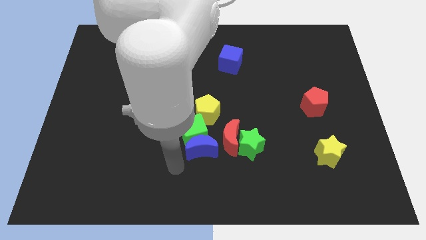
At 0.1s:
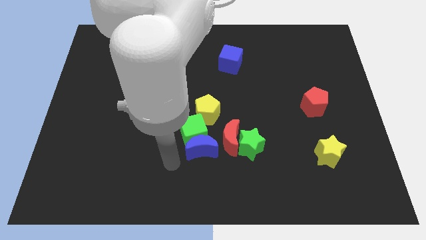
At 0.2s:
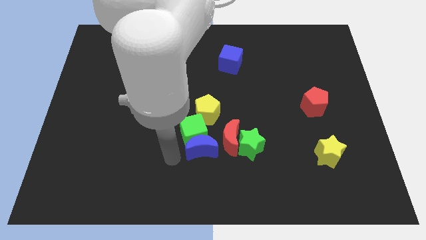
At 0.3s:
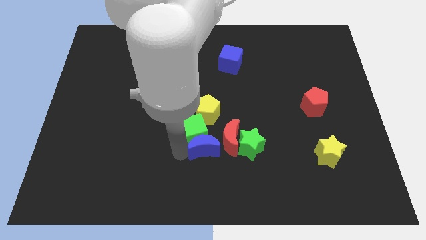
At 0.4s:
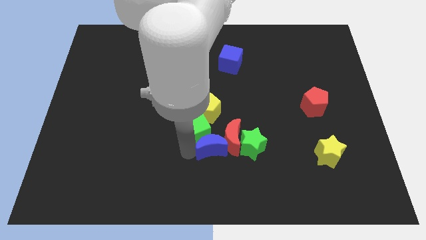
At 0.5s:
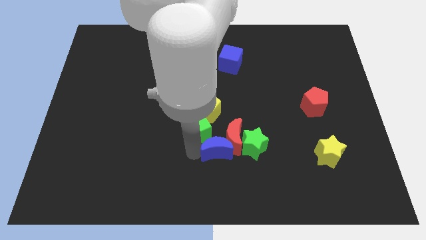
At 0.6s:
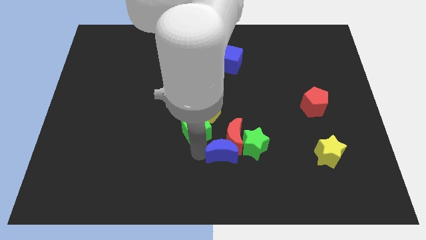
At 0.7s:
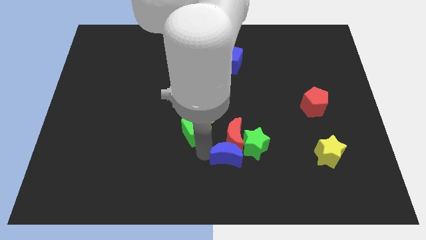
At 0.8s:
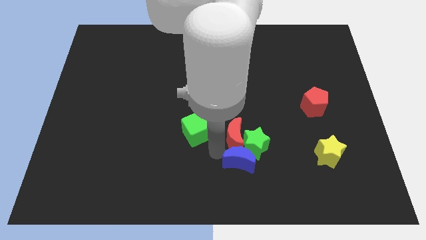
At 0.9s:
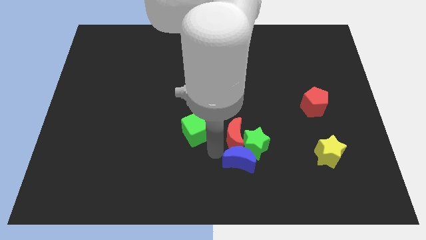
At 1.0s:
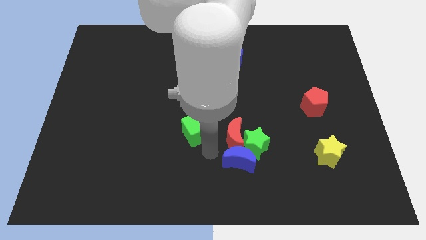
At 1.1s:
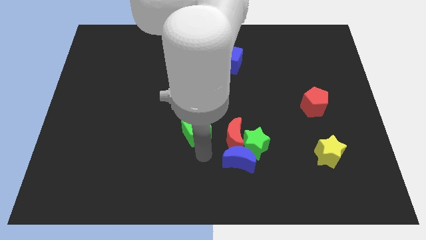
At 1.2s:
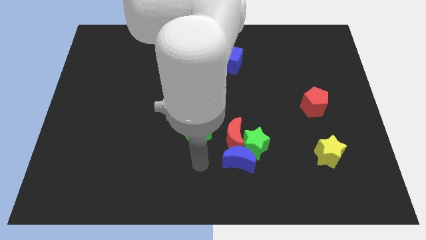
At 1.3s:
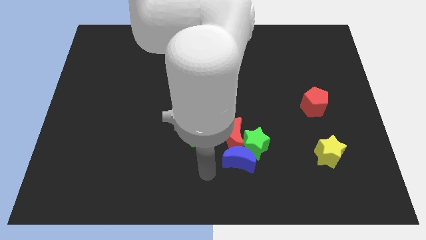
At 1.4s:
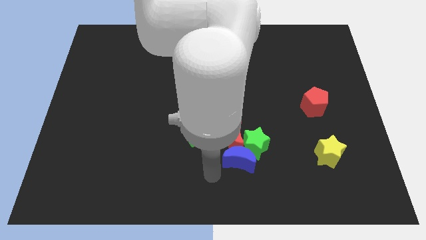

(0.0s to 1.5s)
place the blue crescent below the green star

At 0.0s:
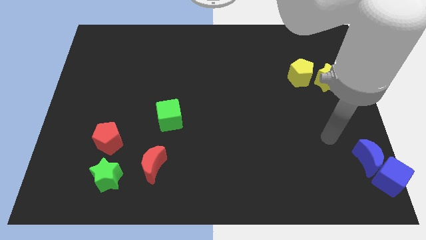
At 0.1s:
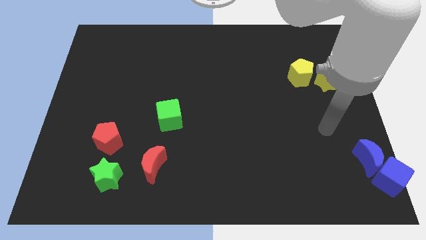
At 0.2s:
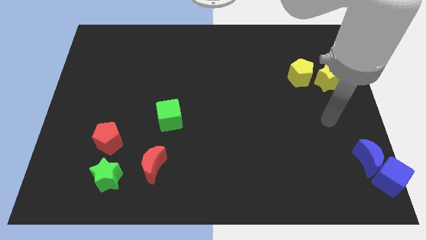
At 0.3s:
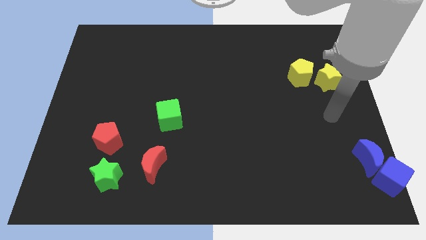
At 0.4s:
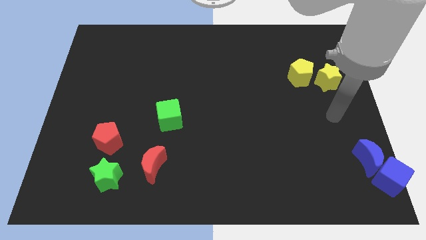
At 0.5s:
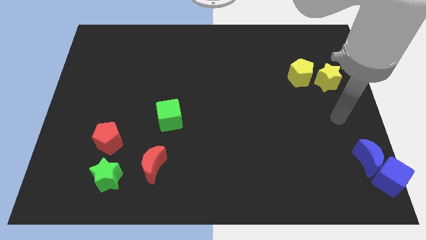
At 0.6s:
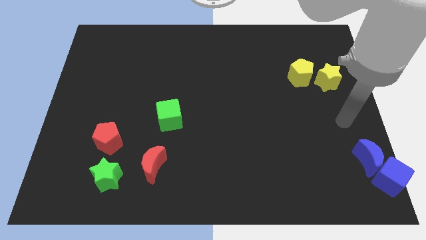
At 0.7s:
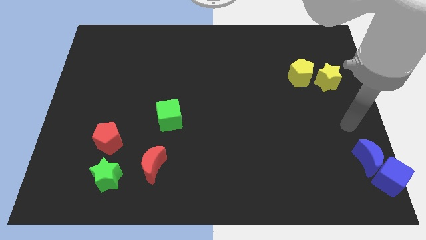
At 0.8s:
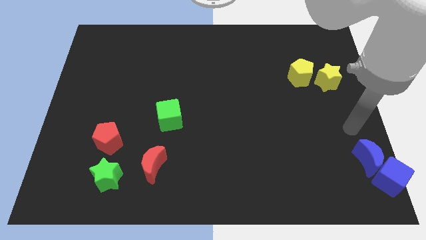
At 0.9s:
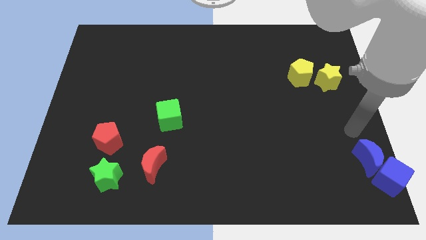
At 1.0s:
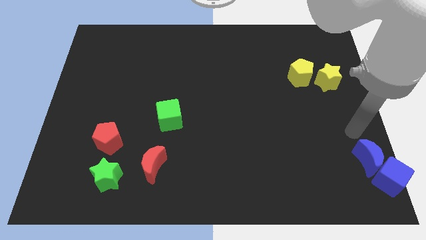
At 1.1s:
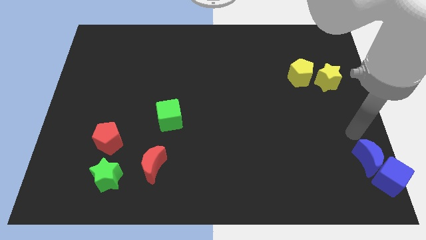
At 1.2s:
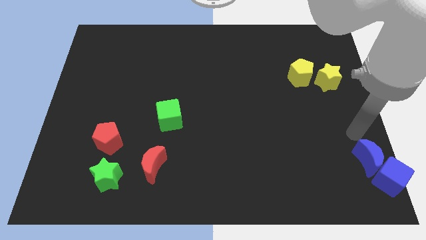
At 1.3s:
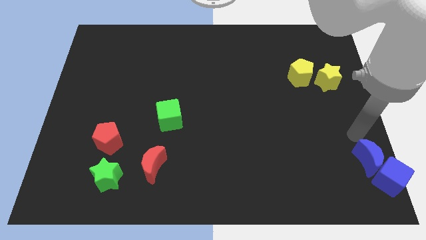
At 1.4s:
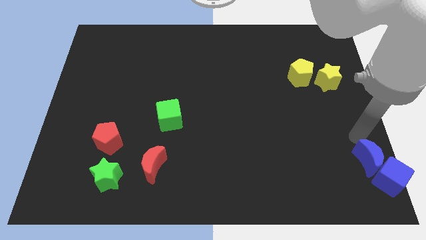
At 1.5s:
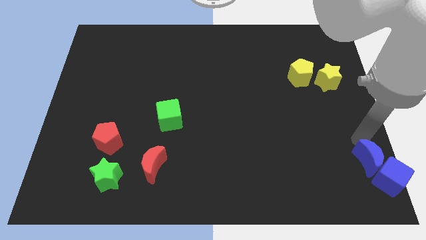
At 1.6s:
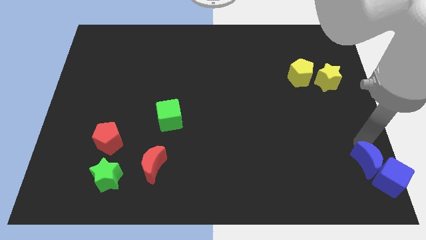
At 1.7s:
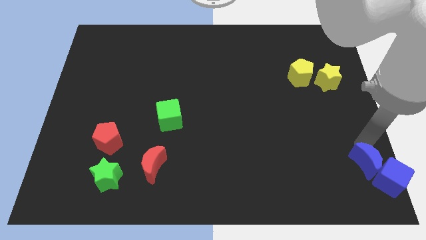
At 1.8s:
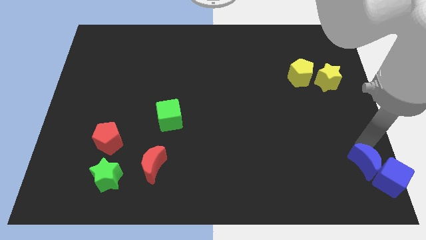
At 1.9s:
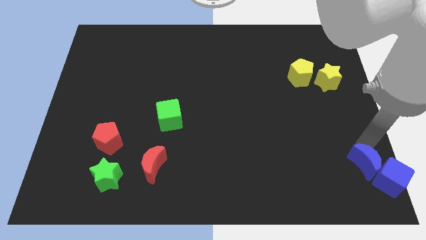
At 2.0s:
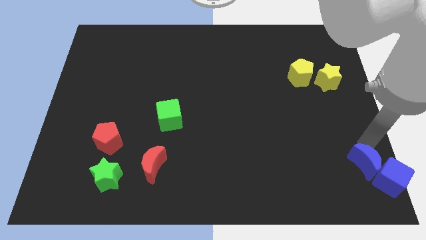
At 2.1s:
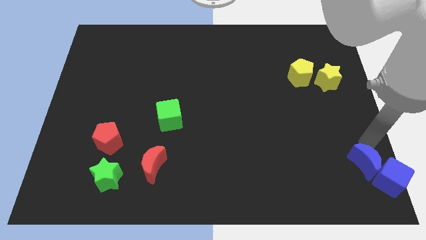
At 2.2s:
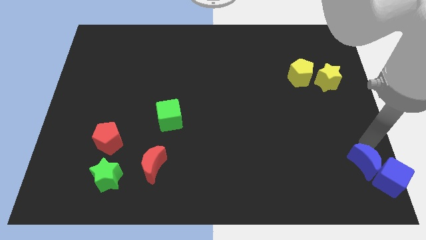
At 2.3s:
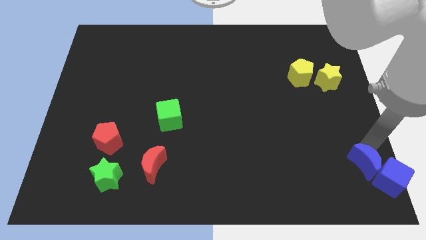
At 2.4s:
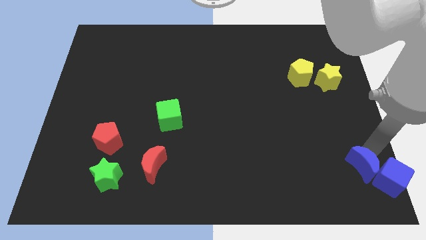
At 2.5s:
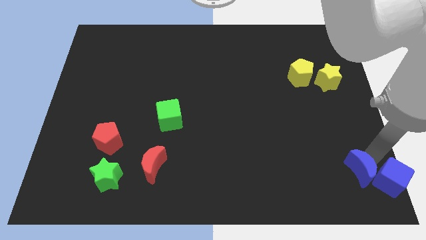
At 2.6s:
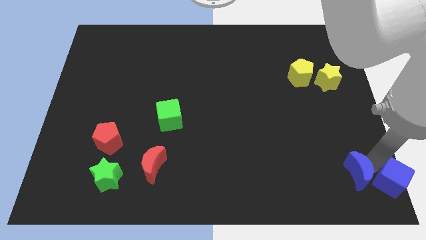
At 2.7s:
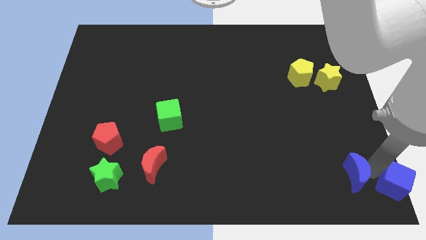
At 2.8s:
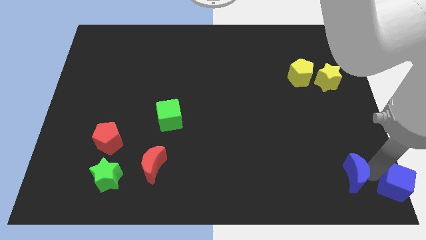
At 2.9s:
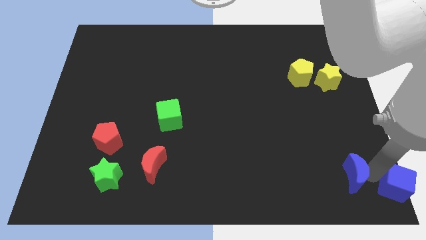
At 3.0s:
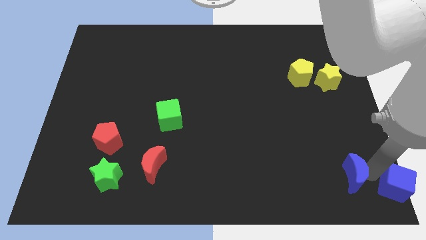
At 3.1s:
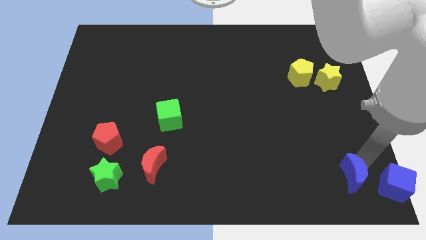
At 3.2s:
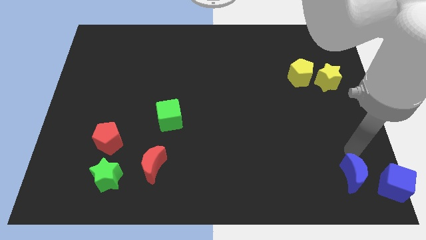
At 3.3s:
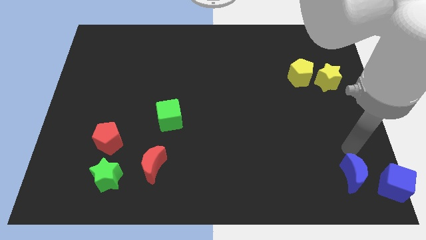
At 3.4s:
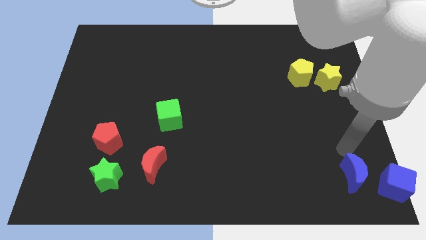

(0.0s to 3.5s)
separate blue crescent and blue cube

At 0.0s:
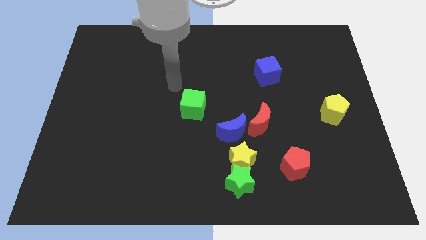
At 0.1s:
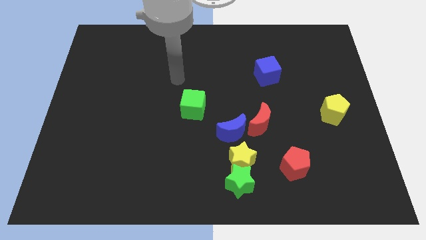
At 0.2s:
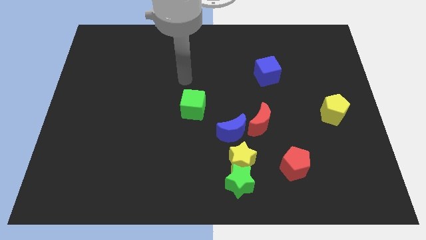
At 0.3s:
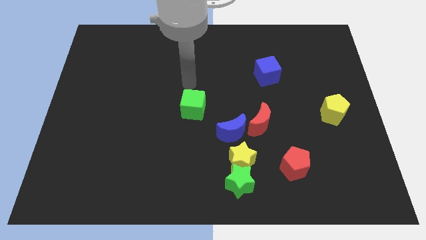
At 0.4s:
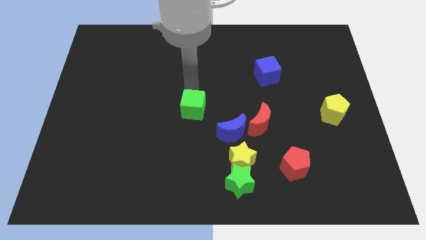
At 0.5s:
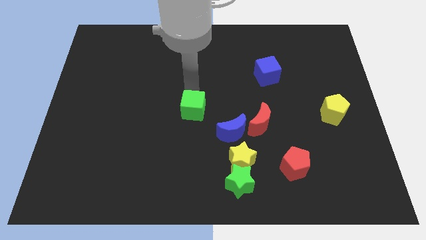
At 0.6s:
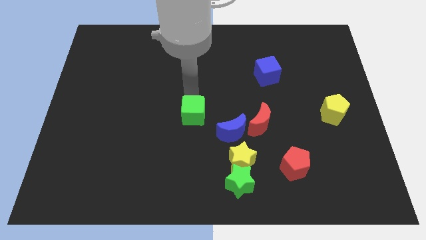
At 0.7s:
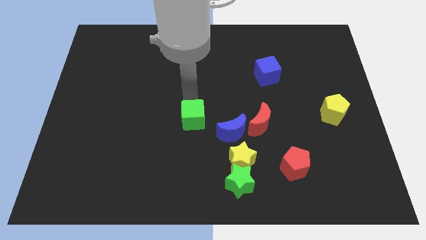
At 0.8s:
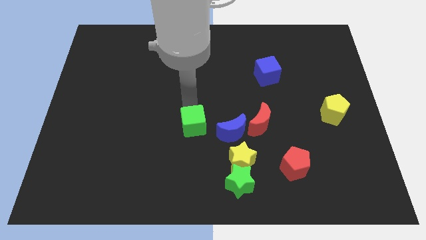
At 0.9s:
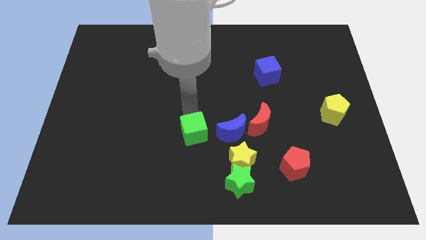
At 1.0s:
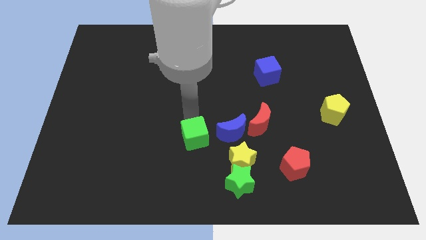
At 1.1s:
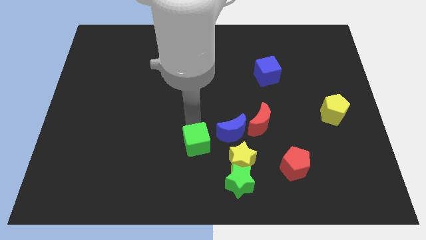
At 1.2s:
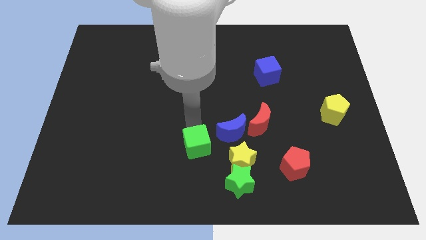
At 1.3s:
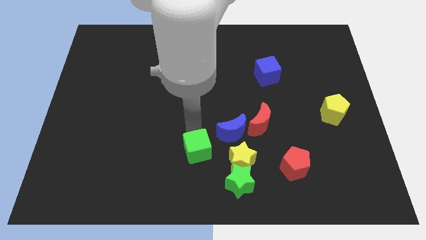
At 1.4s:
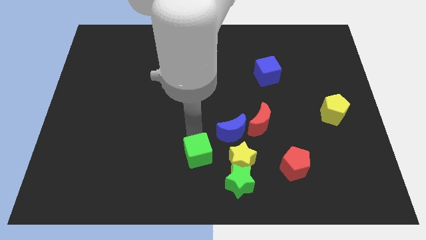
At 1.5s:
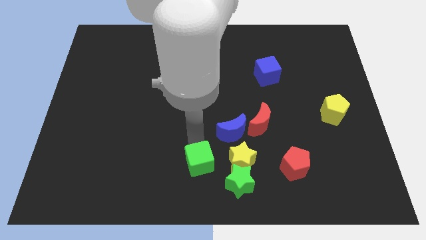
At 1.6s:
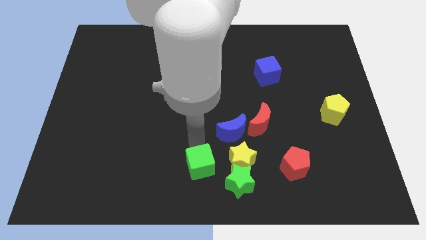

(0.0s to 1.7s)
place the green cube to left side of the yellow star

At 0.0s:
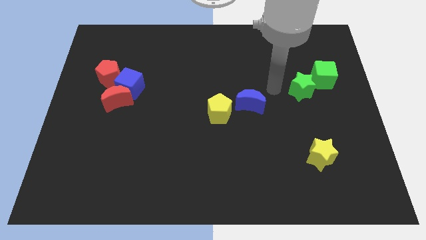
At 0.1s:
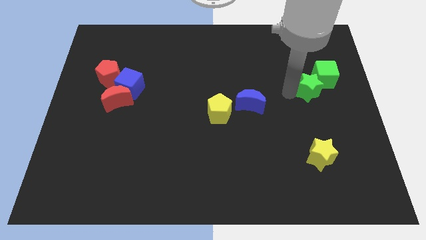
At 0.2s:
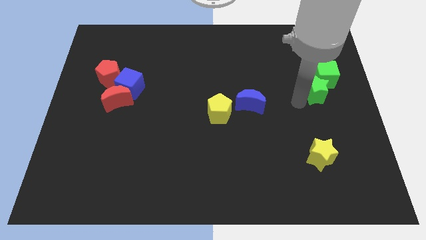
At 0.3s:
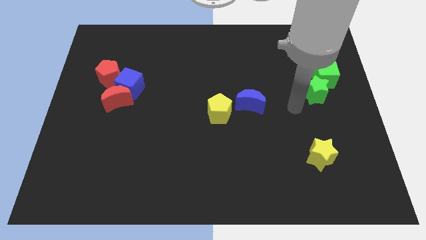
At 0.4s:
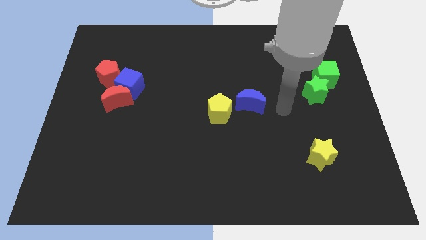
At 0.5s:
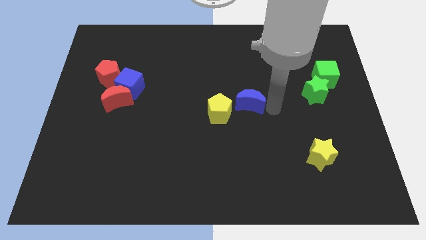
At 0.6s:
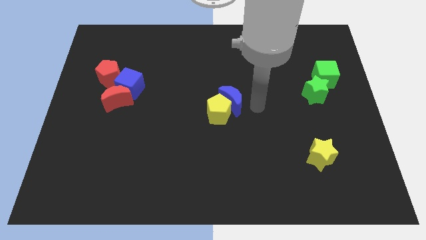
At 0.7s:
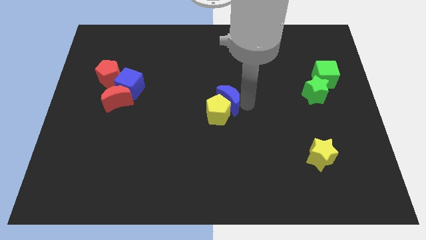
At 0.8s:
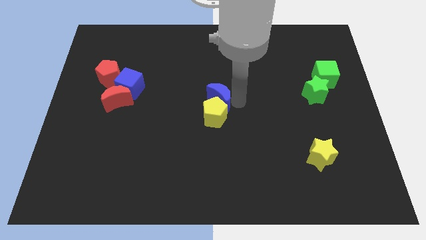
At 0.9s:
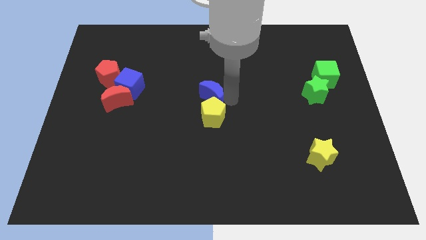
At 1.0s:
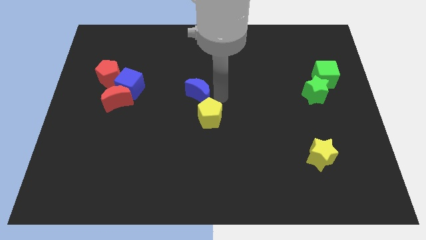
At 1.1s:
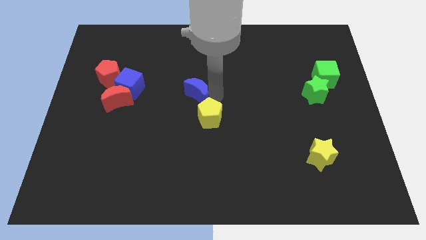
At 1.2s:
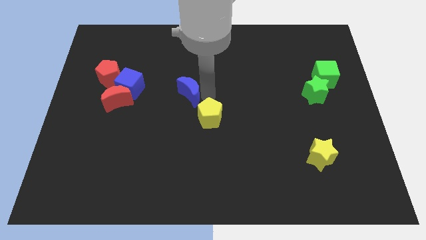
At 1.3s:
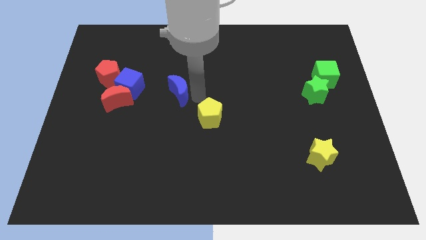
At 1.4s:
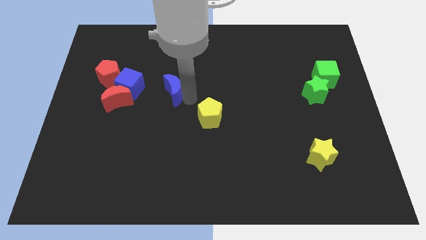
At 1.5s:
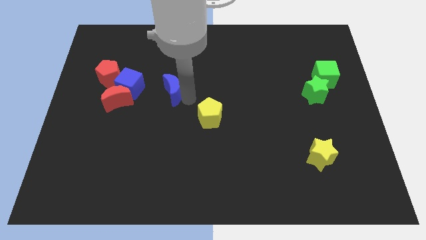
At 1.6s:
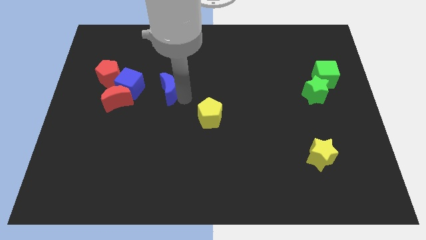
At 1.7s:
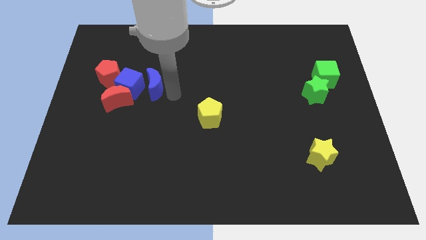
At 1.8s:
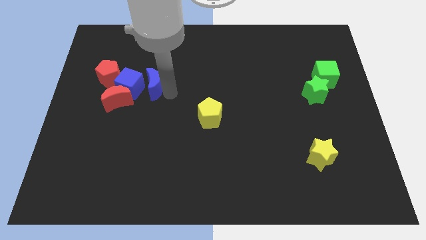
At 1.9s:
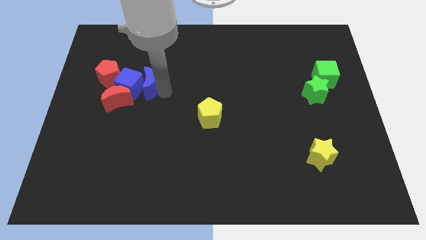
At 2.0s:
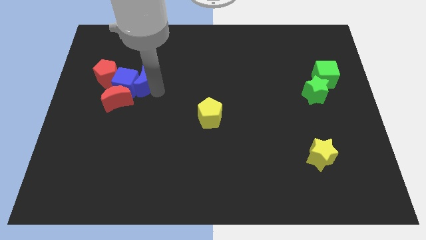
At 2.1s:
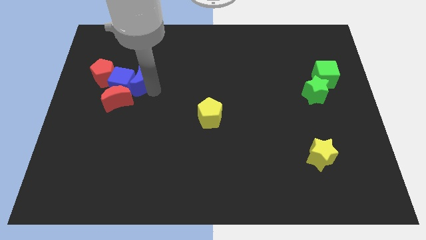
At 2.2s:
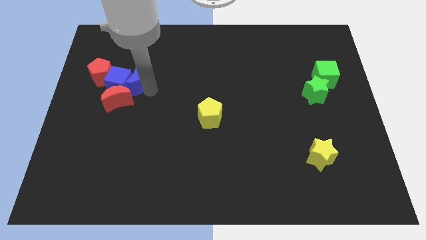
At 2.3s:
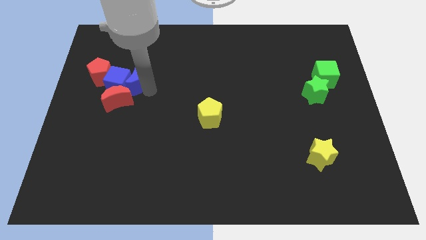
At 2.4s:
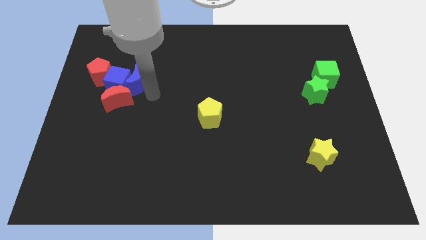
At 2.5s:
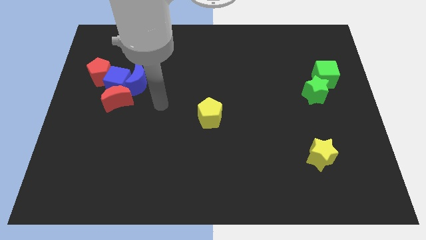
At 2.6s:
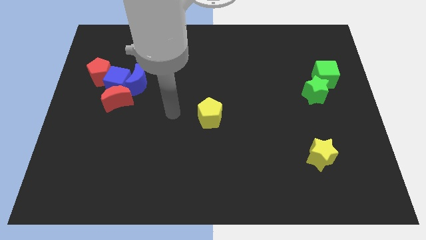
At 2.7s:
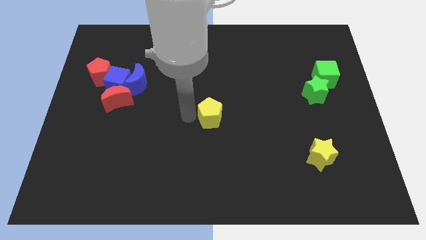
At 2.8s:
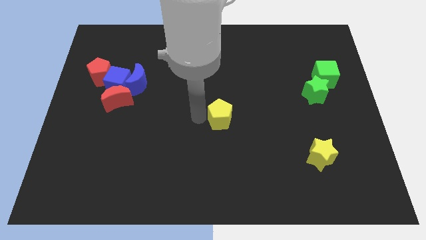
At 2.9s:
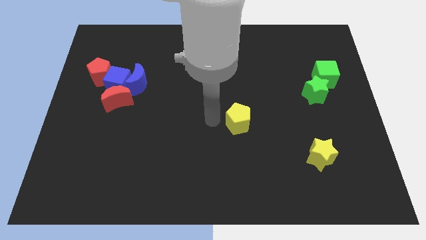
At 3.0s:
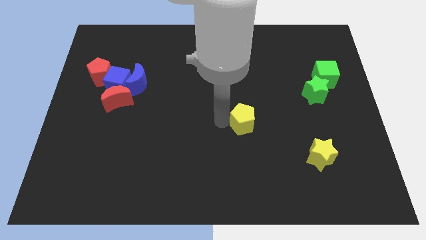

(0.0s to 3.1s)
move the blue crescent and yellow pentagon diagonally on the top right side of the yellow star
